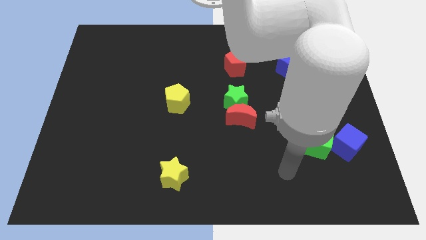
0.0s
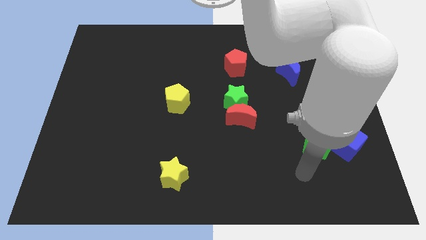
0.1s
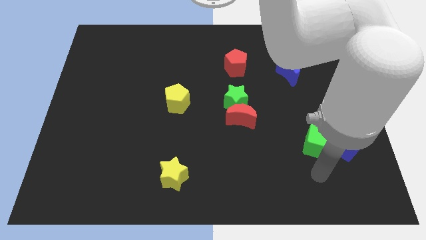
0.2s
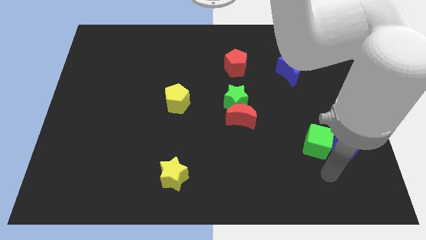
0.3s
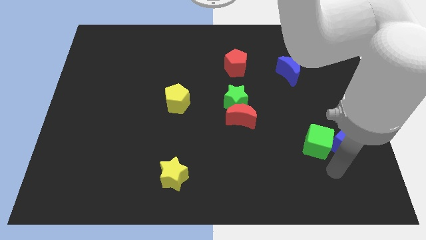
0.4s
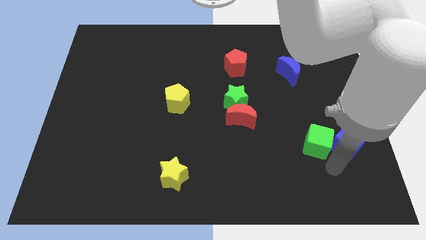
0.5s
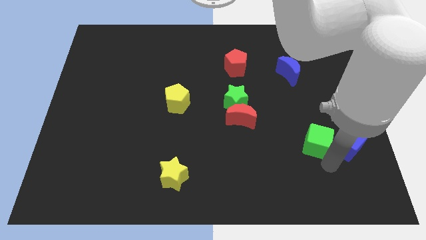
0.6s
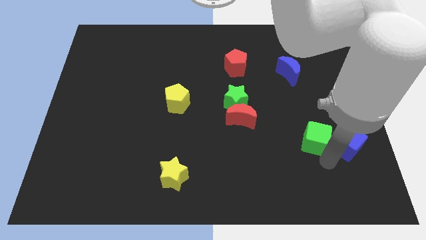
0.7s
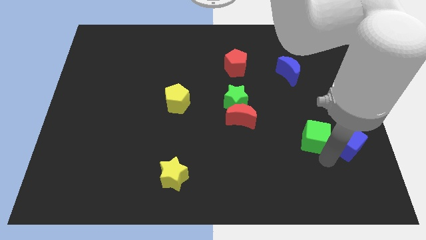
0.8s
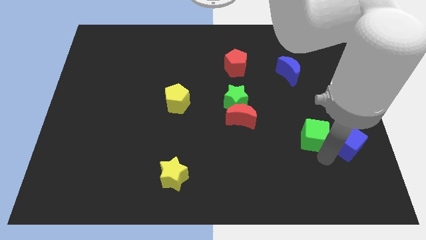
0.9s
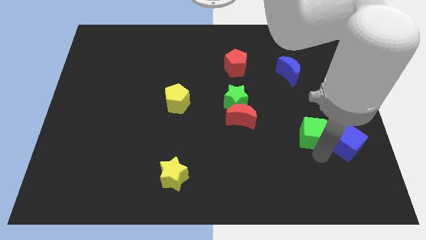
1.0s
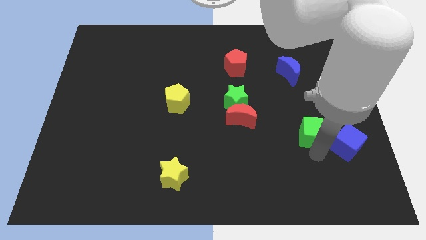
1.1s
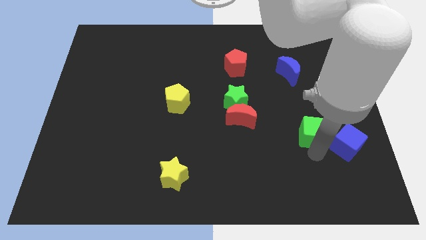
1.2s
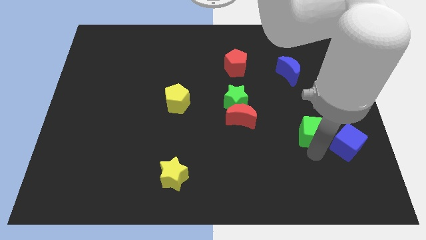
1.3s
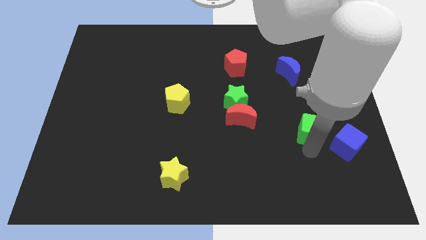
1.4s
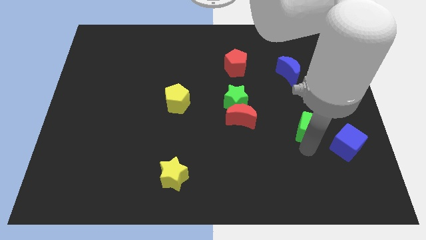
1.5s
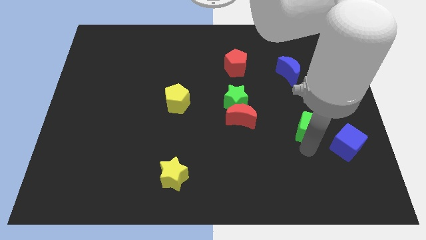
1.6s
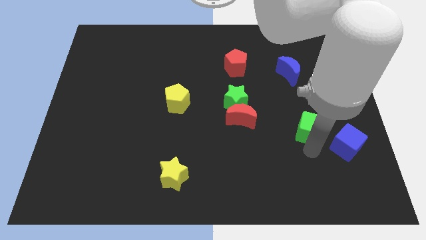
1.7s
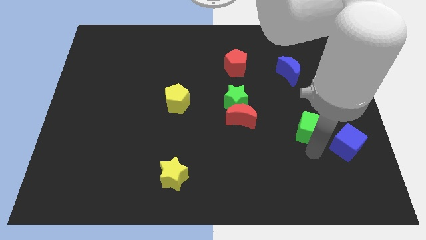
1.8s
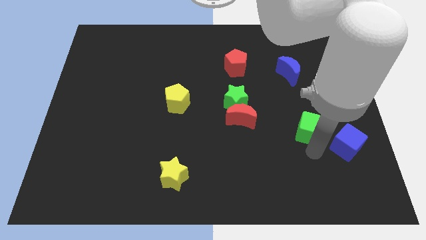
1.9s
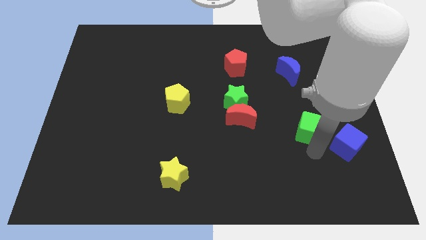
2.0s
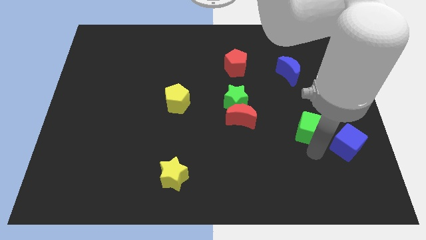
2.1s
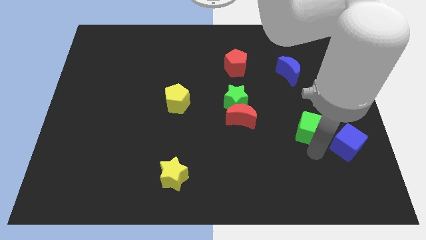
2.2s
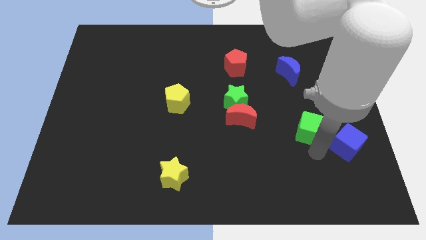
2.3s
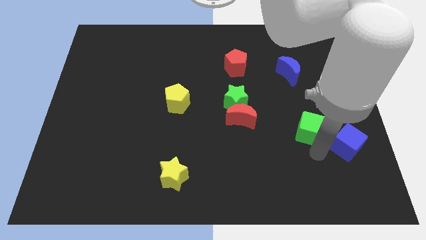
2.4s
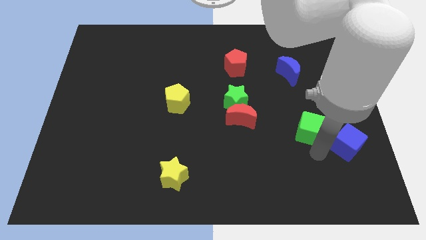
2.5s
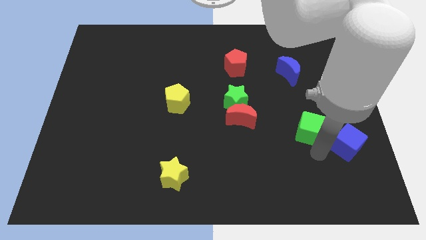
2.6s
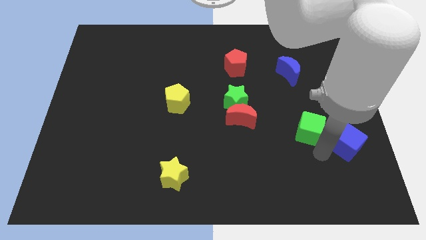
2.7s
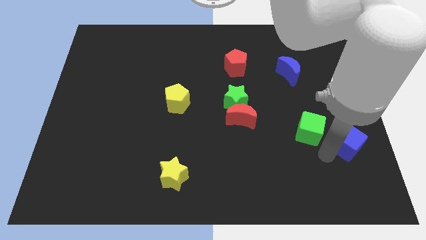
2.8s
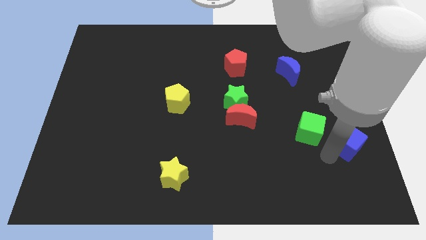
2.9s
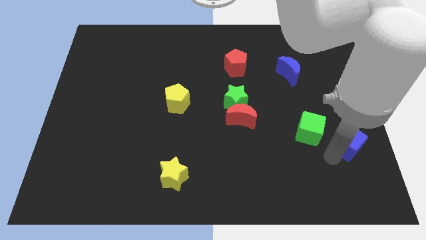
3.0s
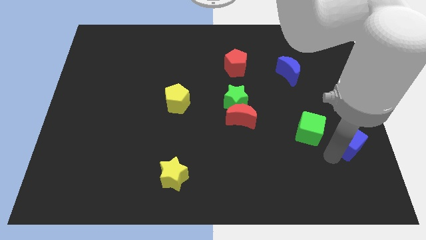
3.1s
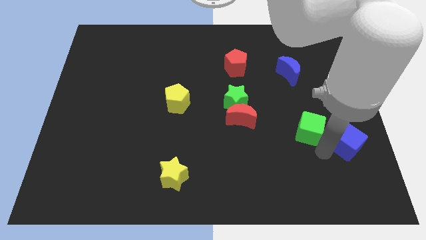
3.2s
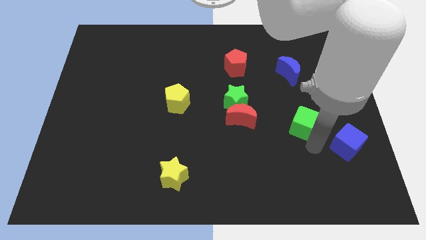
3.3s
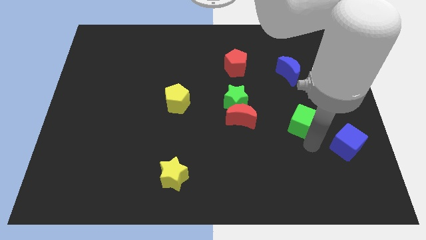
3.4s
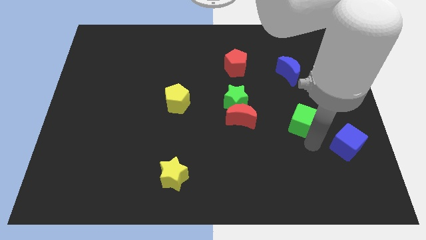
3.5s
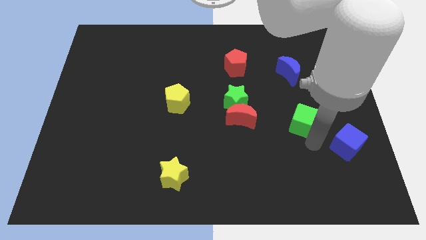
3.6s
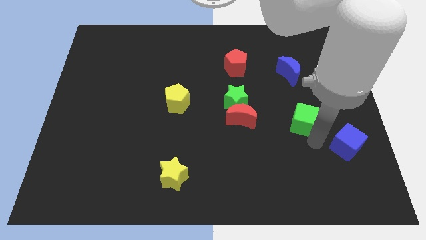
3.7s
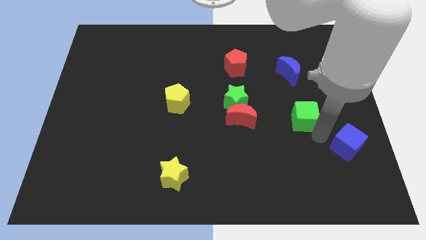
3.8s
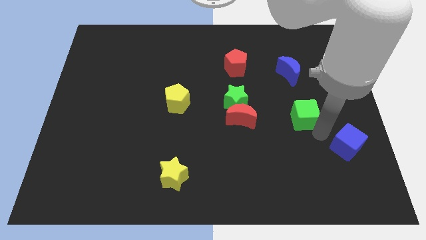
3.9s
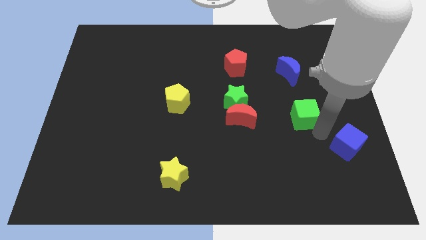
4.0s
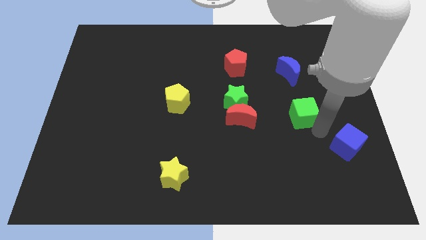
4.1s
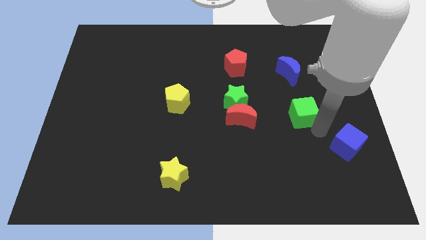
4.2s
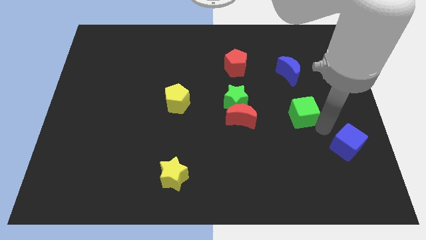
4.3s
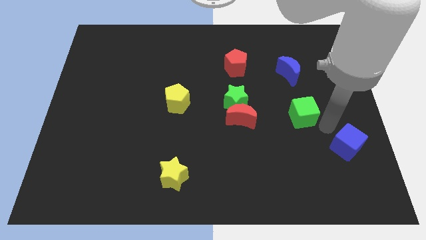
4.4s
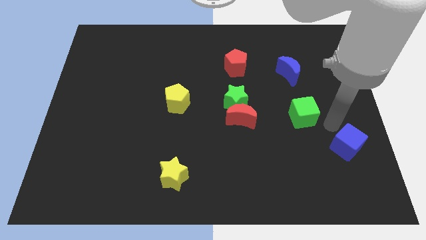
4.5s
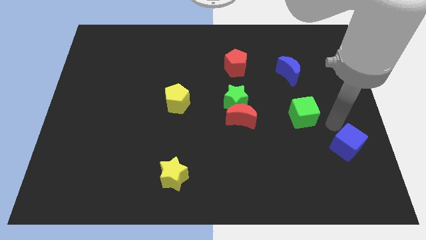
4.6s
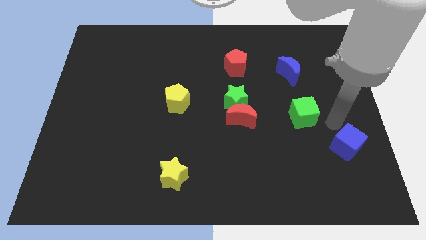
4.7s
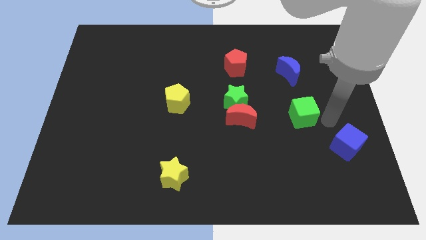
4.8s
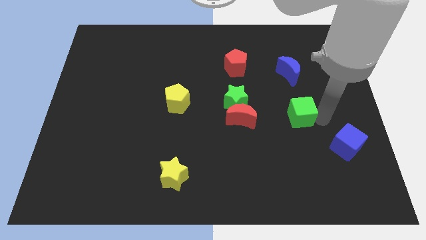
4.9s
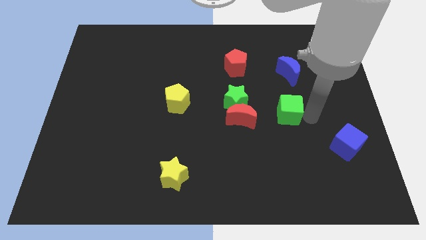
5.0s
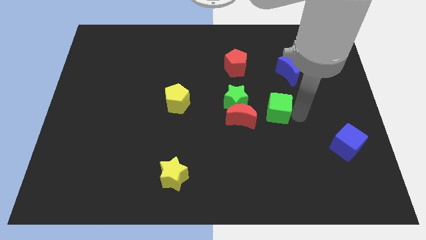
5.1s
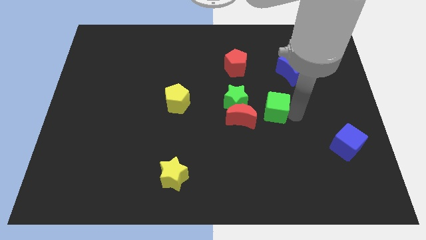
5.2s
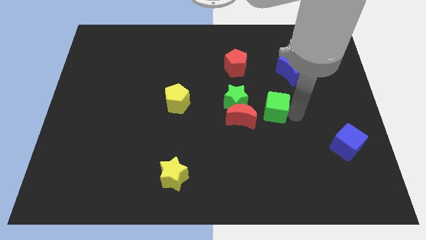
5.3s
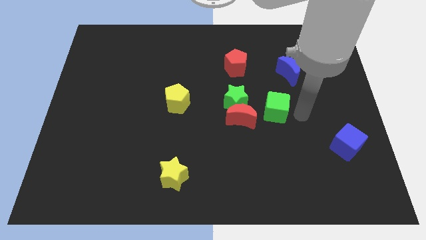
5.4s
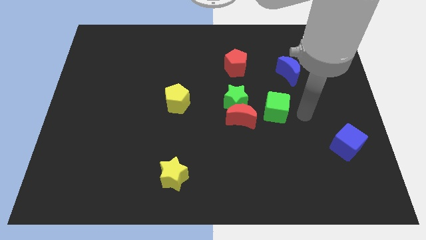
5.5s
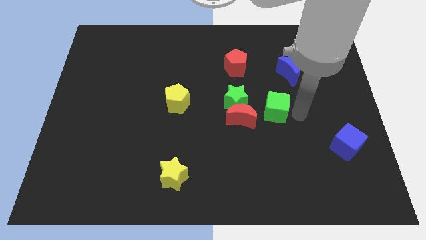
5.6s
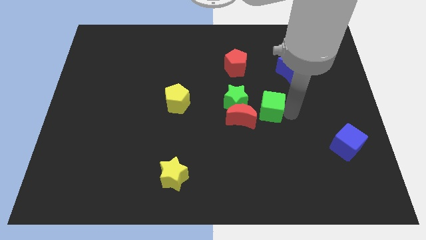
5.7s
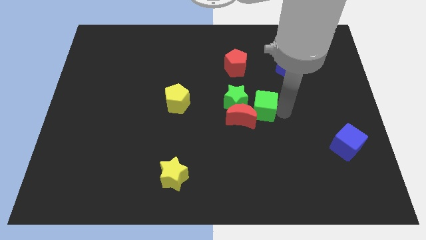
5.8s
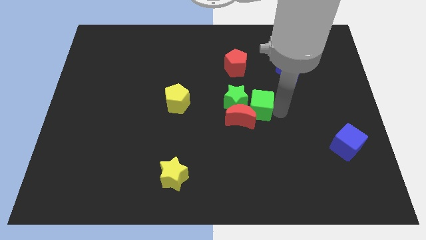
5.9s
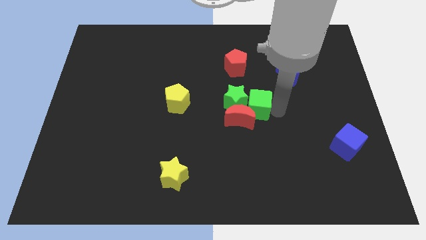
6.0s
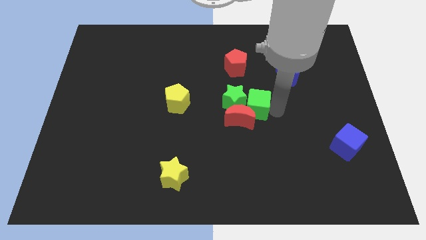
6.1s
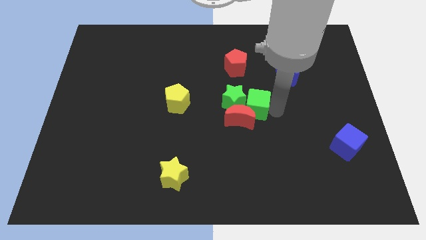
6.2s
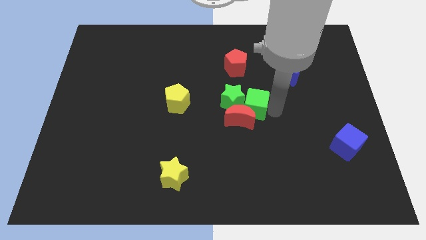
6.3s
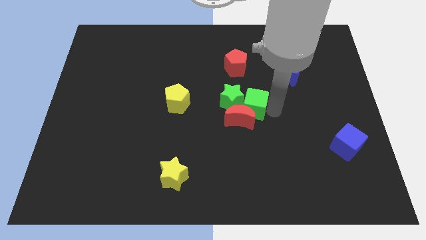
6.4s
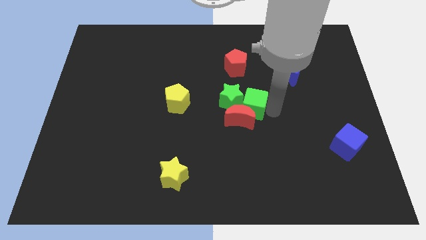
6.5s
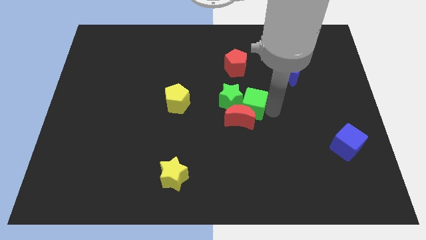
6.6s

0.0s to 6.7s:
push the green cube into the green star

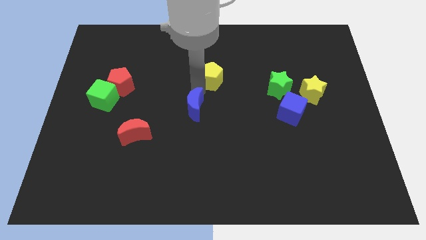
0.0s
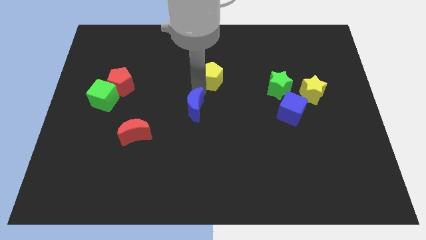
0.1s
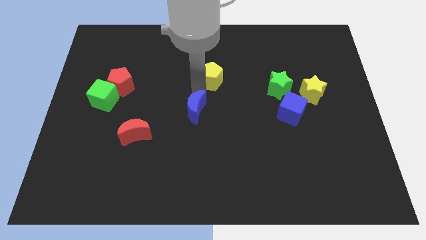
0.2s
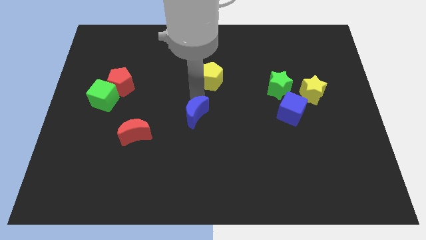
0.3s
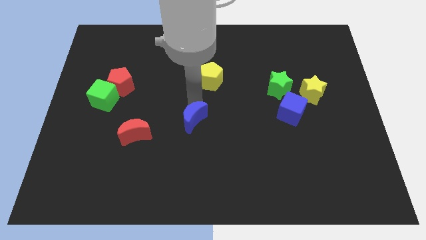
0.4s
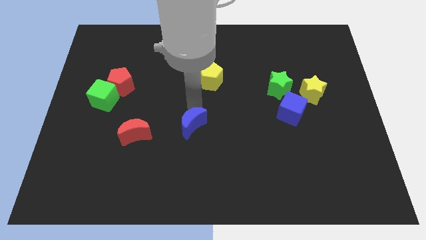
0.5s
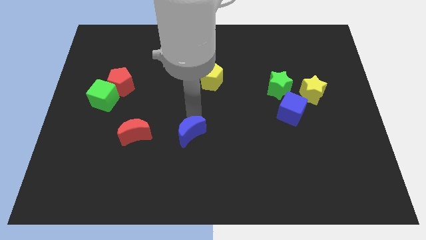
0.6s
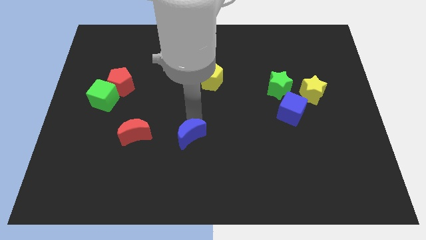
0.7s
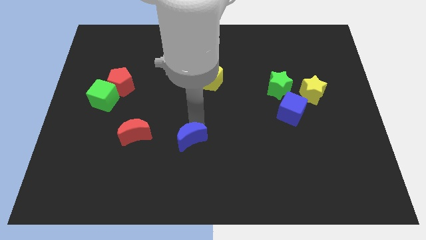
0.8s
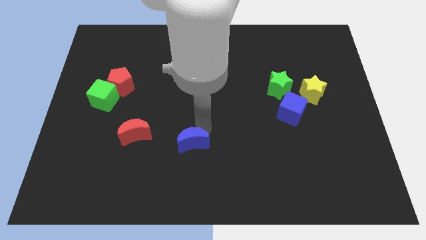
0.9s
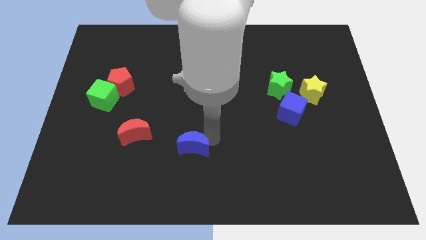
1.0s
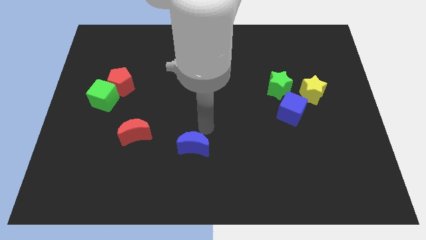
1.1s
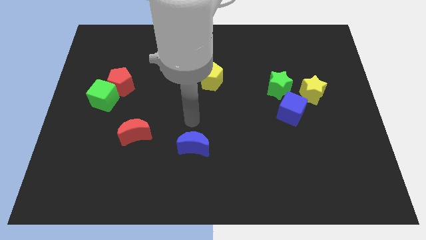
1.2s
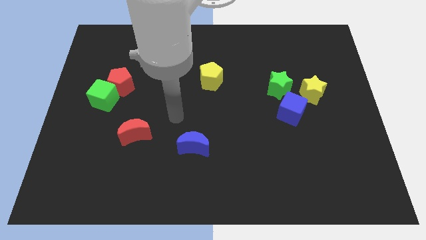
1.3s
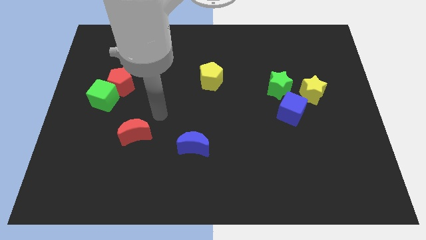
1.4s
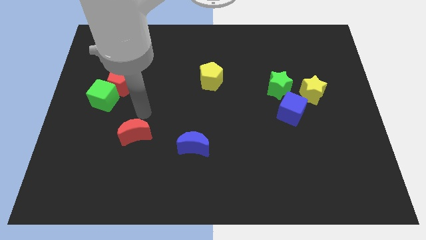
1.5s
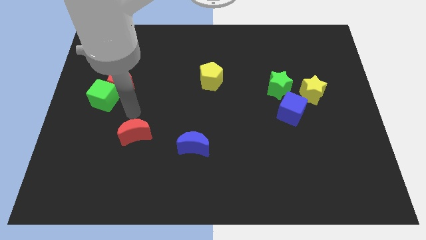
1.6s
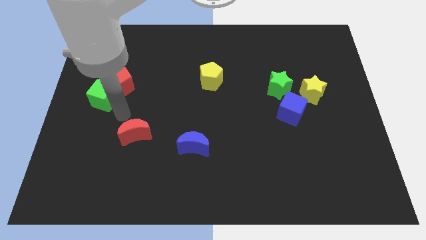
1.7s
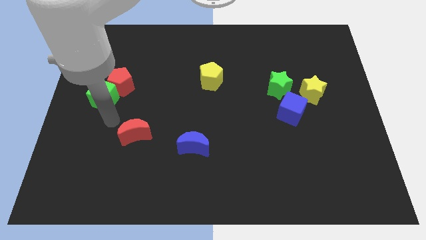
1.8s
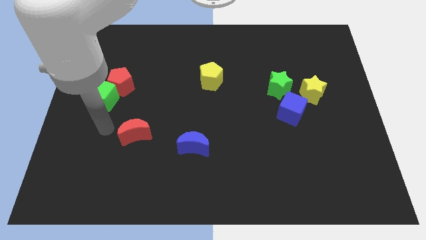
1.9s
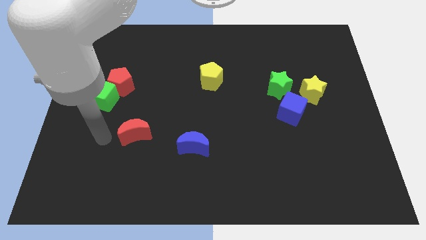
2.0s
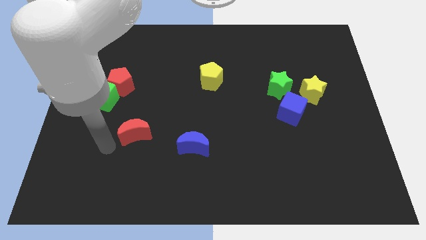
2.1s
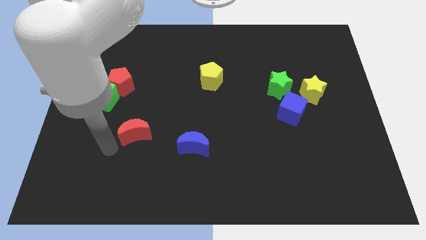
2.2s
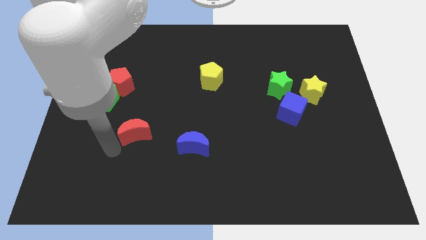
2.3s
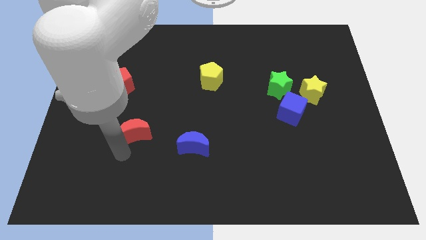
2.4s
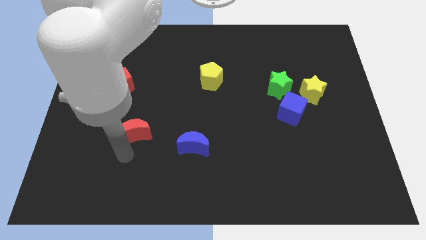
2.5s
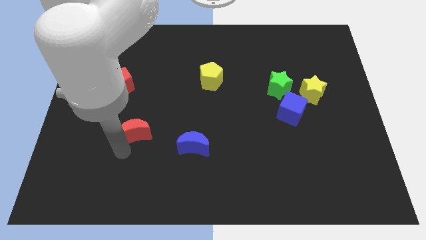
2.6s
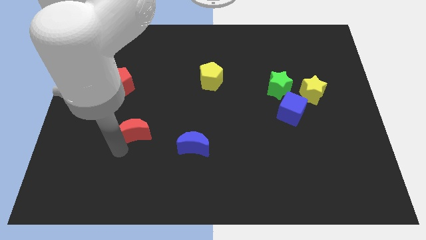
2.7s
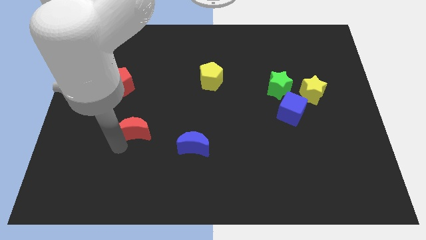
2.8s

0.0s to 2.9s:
drag the blue moon parallel bottom left to the yellow pentagon
